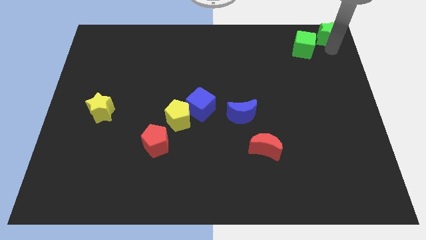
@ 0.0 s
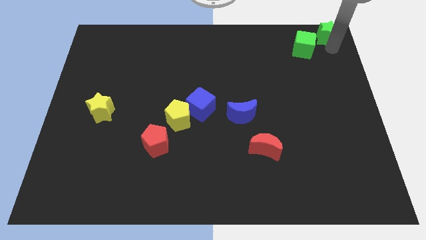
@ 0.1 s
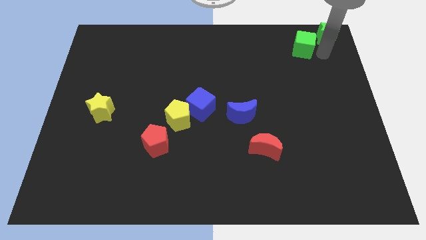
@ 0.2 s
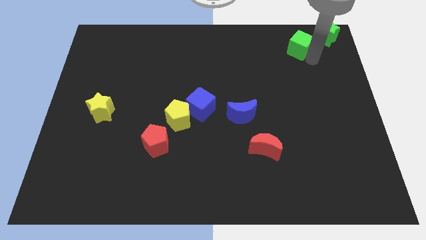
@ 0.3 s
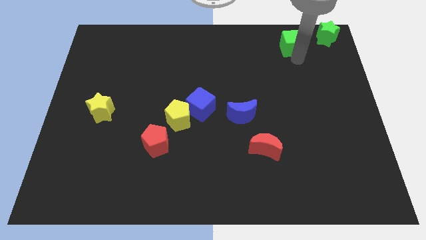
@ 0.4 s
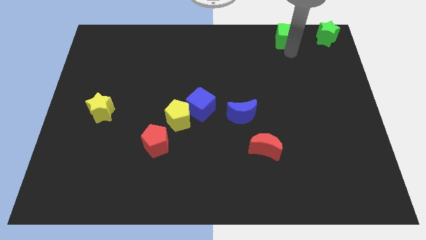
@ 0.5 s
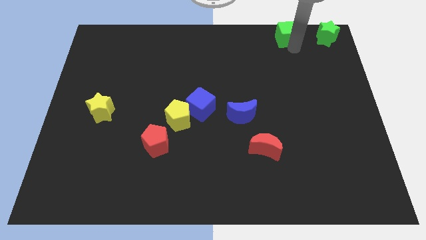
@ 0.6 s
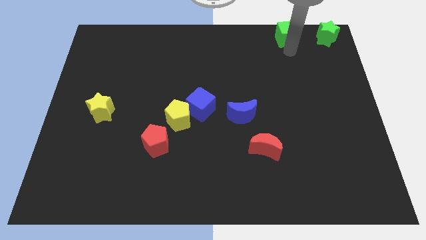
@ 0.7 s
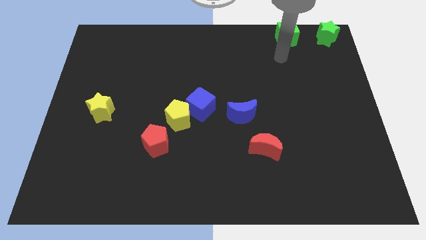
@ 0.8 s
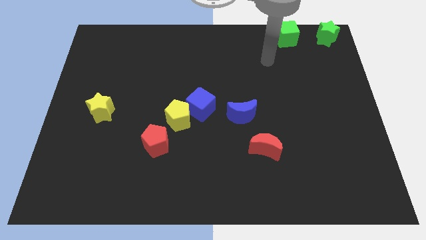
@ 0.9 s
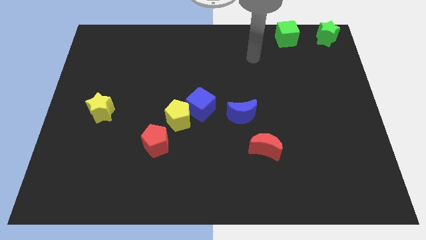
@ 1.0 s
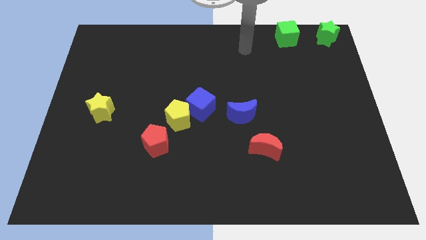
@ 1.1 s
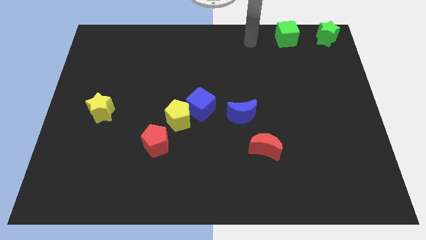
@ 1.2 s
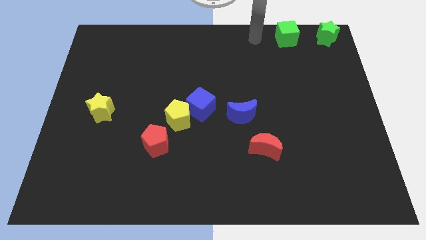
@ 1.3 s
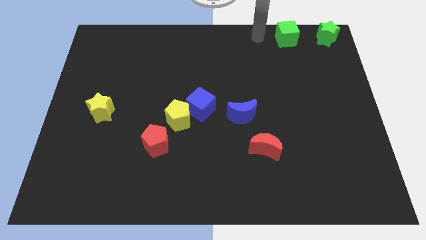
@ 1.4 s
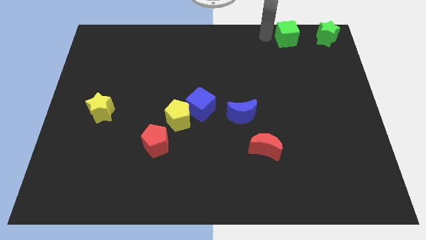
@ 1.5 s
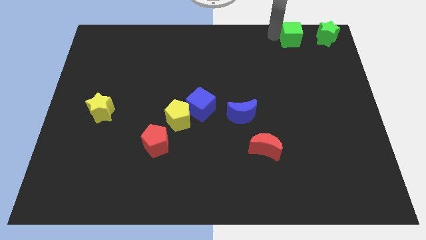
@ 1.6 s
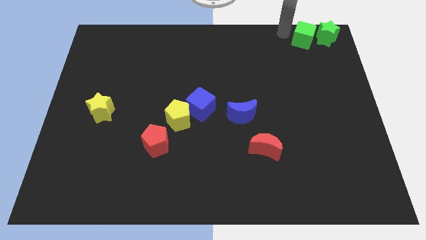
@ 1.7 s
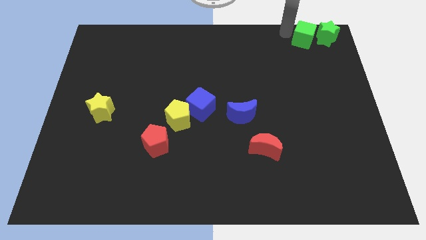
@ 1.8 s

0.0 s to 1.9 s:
move the green cube into the green star

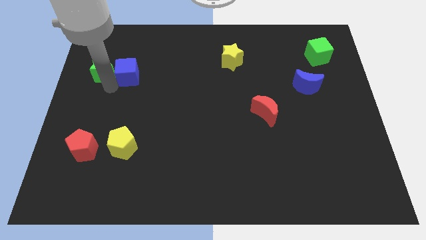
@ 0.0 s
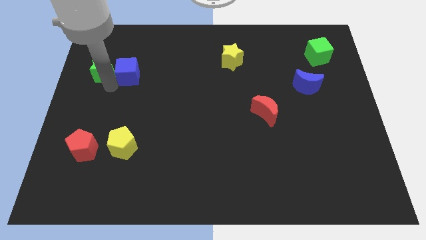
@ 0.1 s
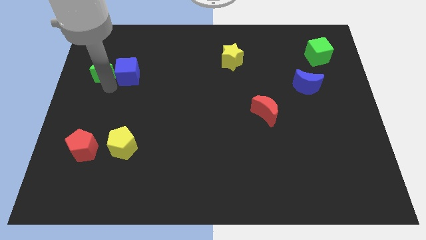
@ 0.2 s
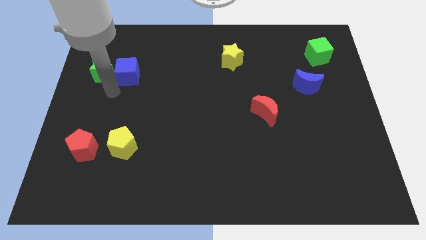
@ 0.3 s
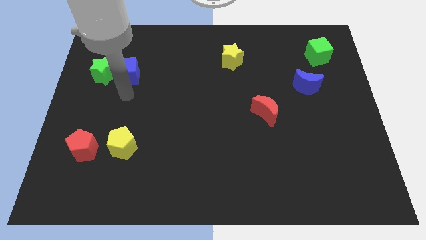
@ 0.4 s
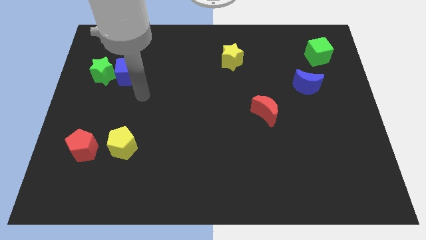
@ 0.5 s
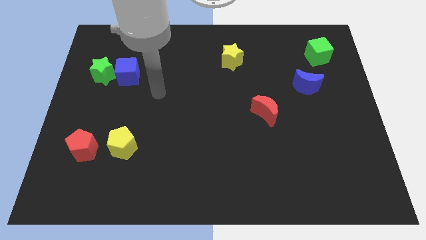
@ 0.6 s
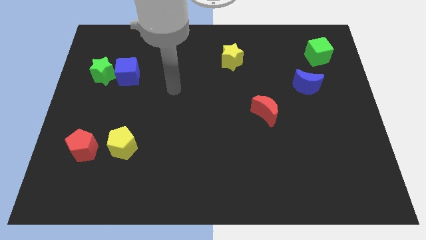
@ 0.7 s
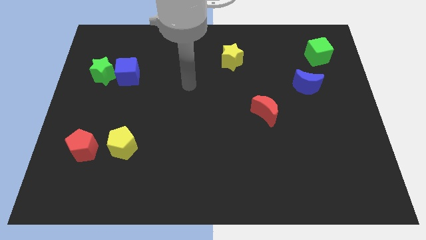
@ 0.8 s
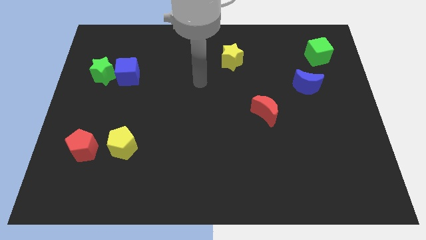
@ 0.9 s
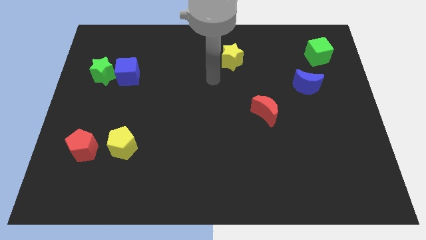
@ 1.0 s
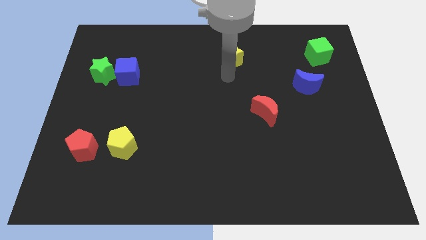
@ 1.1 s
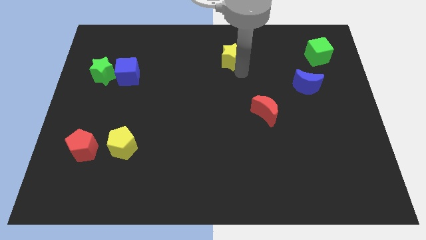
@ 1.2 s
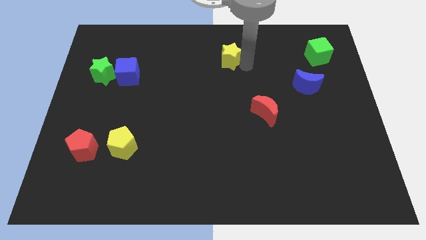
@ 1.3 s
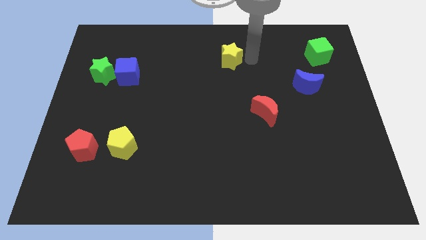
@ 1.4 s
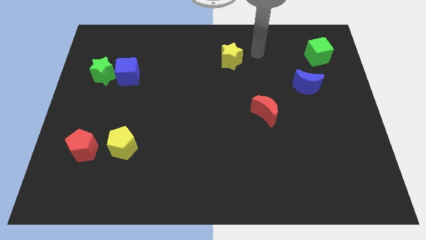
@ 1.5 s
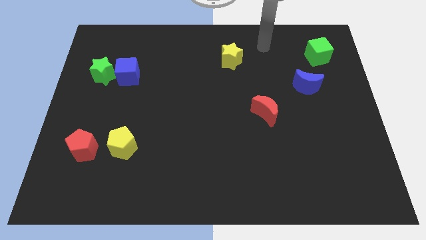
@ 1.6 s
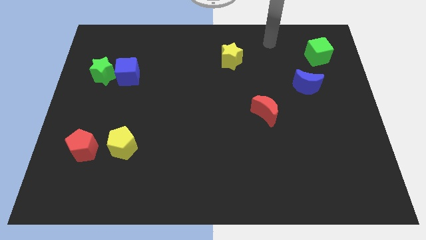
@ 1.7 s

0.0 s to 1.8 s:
move arm away from blue cube

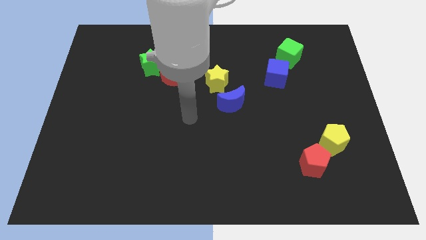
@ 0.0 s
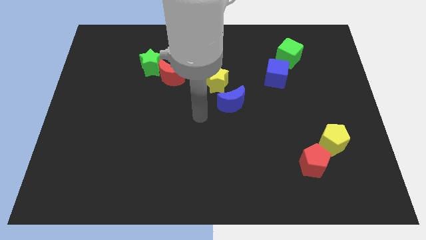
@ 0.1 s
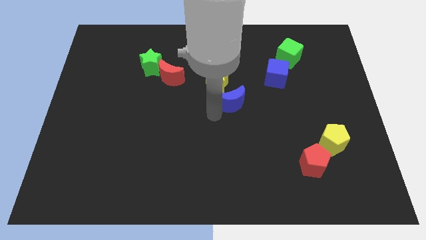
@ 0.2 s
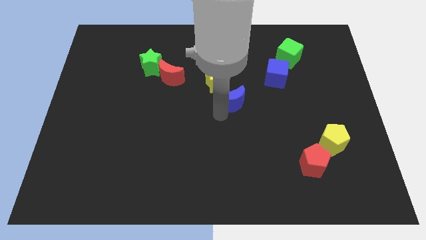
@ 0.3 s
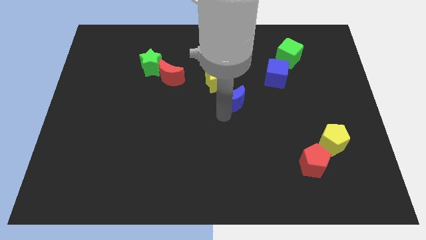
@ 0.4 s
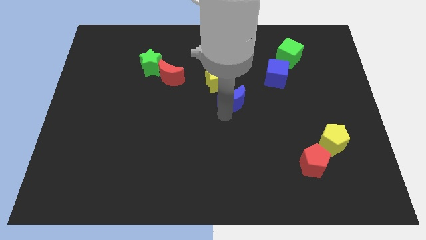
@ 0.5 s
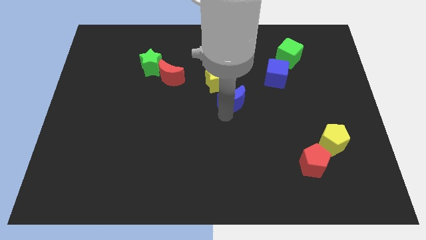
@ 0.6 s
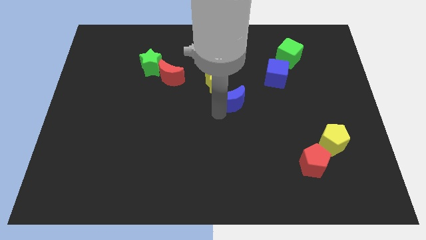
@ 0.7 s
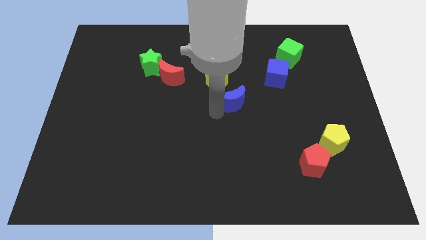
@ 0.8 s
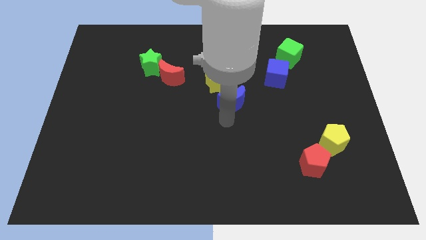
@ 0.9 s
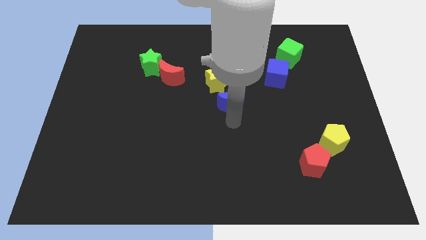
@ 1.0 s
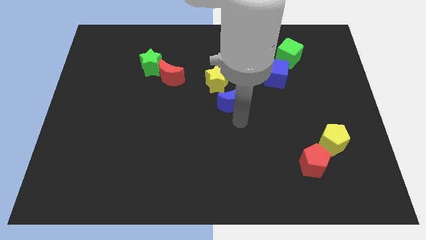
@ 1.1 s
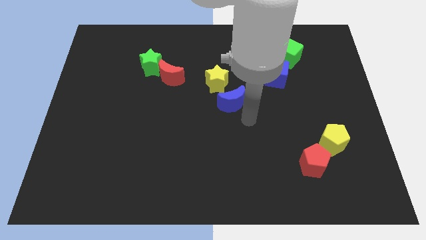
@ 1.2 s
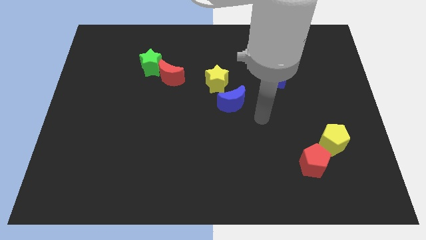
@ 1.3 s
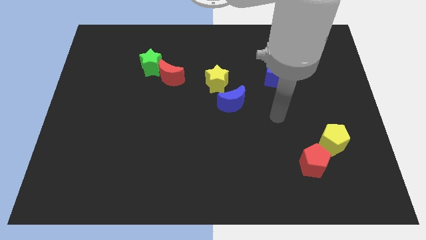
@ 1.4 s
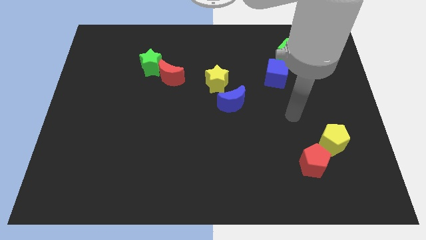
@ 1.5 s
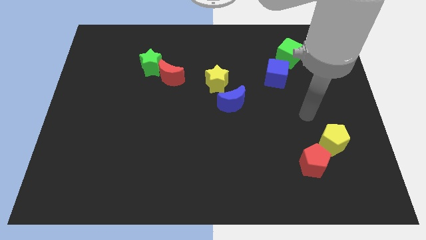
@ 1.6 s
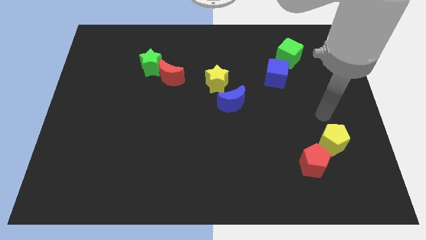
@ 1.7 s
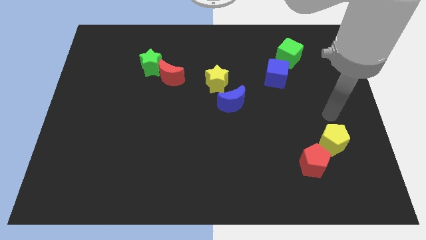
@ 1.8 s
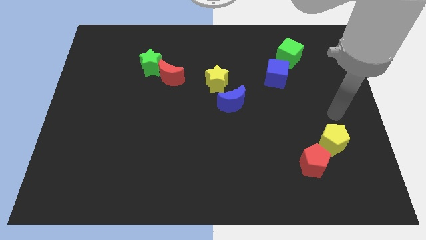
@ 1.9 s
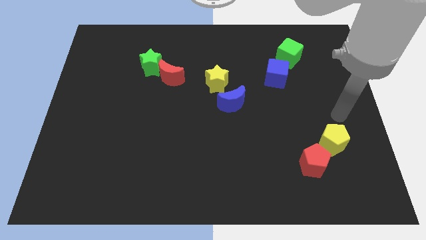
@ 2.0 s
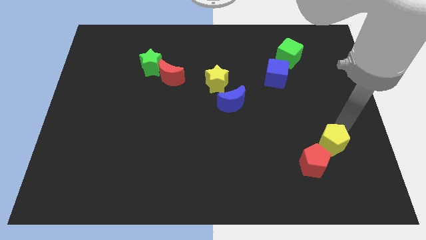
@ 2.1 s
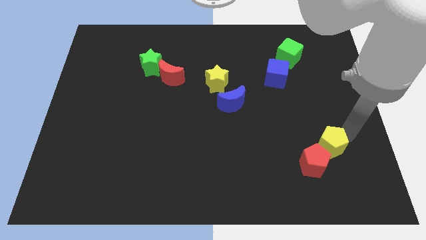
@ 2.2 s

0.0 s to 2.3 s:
move the arm right to the yellow pentagon

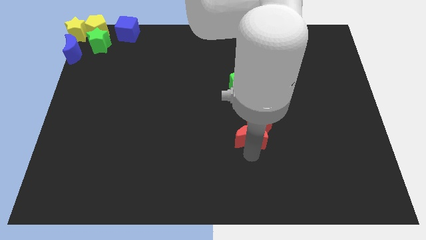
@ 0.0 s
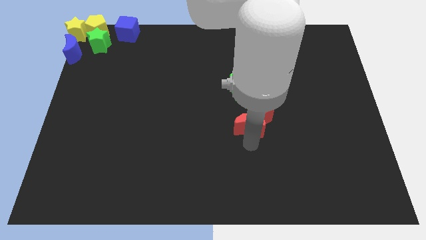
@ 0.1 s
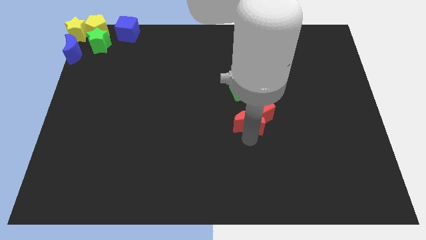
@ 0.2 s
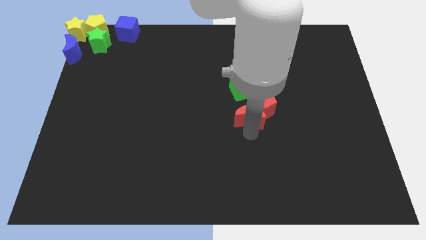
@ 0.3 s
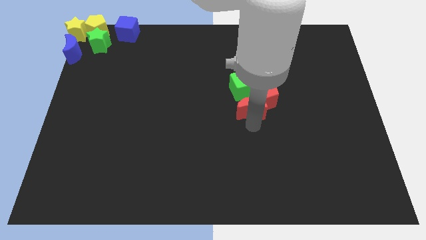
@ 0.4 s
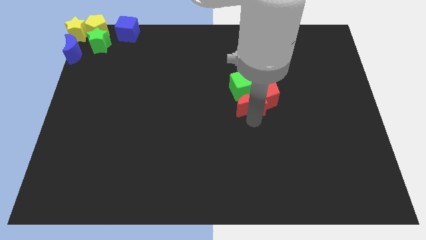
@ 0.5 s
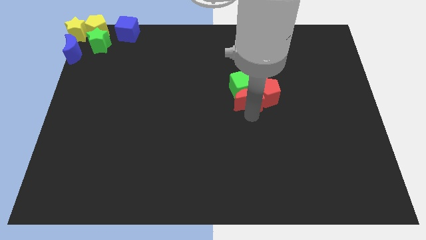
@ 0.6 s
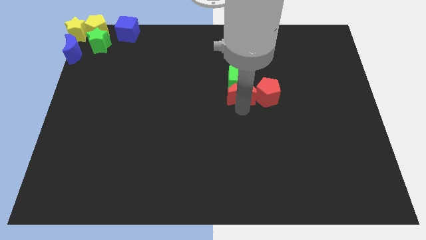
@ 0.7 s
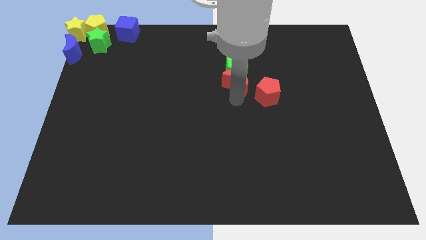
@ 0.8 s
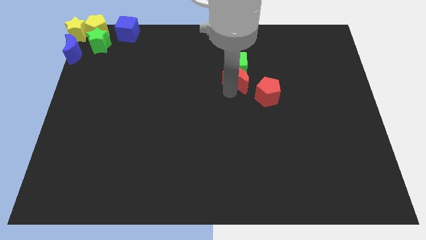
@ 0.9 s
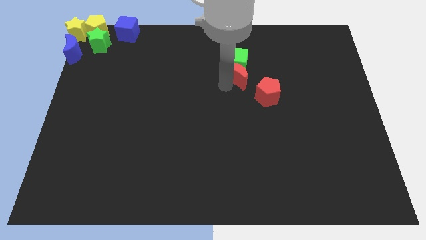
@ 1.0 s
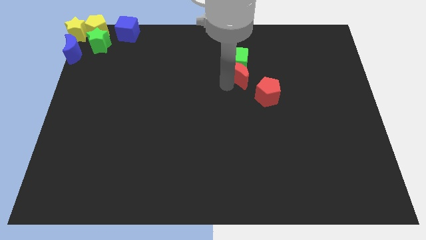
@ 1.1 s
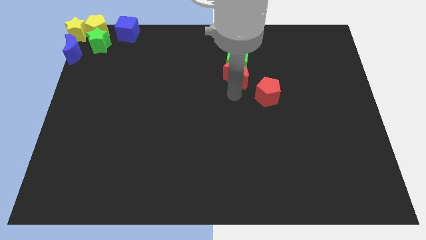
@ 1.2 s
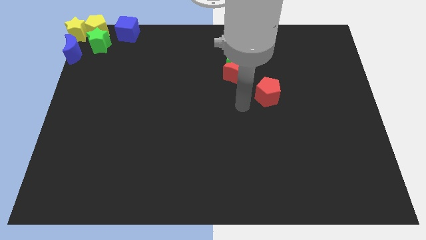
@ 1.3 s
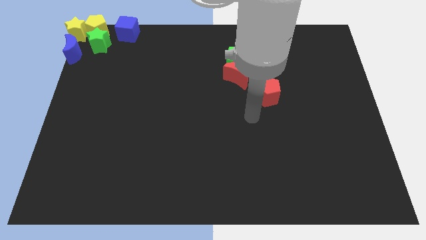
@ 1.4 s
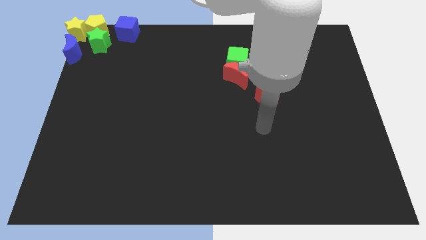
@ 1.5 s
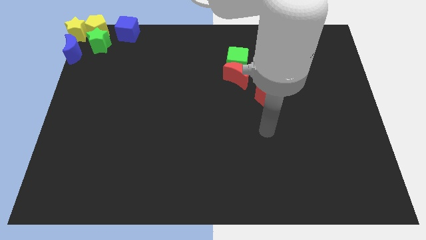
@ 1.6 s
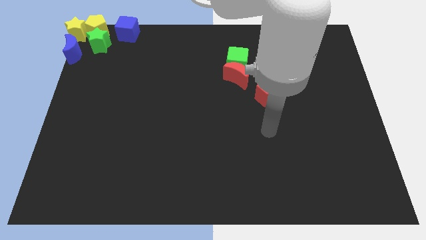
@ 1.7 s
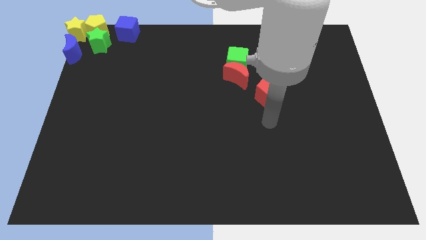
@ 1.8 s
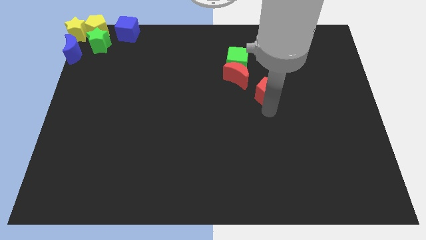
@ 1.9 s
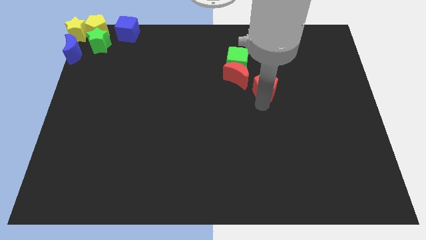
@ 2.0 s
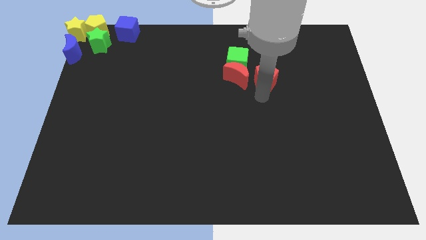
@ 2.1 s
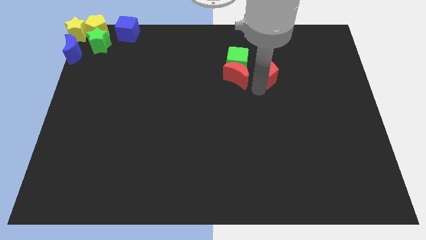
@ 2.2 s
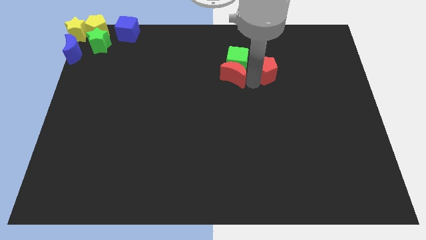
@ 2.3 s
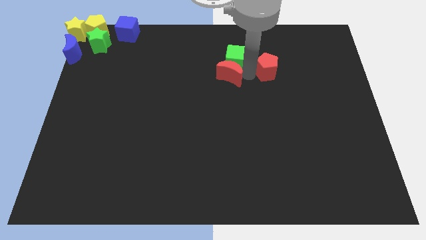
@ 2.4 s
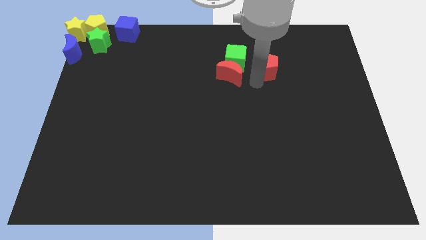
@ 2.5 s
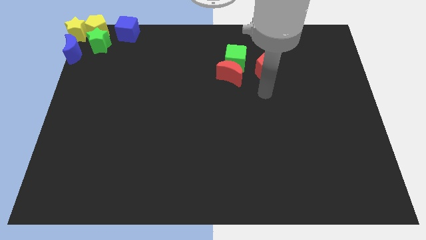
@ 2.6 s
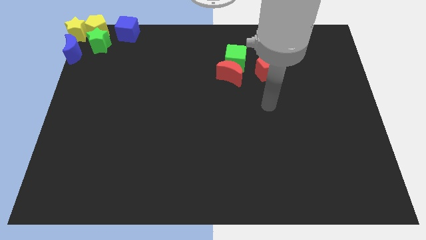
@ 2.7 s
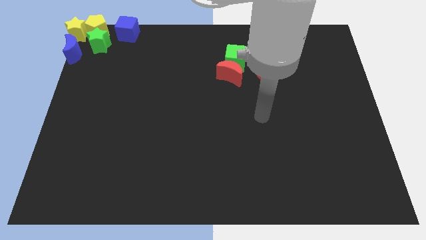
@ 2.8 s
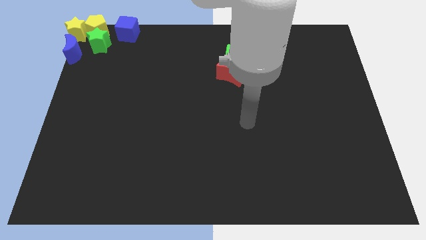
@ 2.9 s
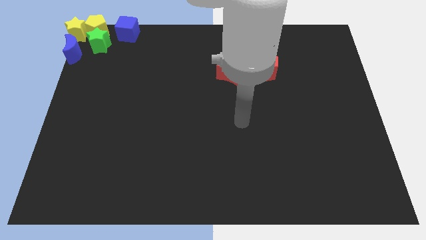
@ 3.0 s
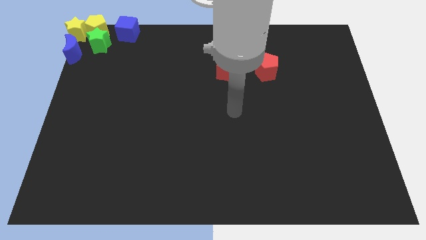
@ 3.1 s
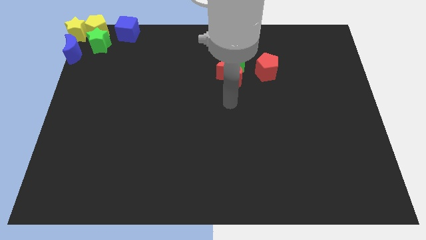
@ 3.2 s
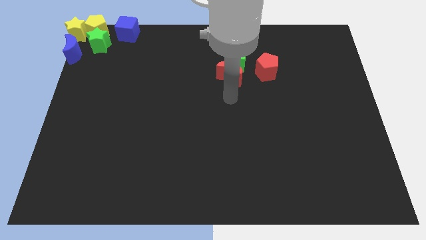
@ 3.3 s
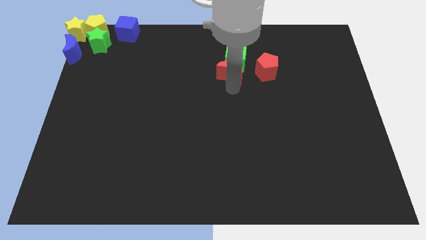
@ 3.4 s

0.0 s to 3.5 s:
drag both the red blocks and green cube towards the top center of the board
